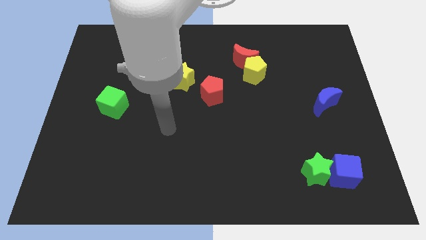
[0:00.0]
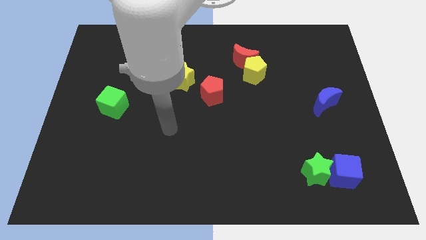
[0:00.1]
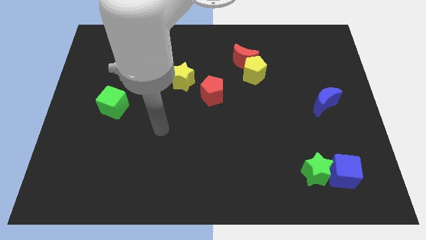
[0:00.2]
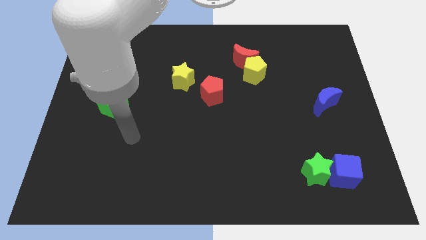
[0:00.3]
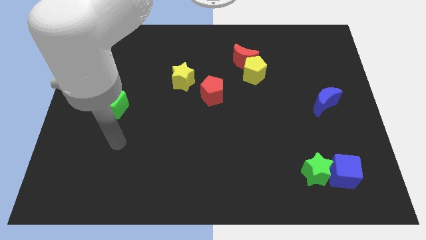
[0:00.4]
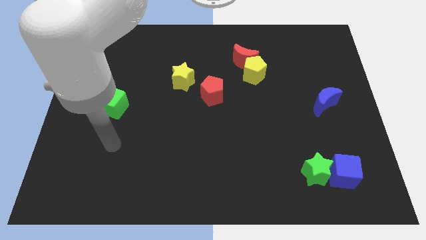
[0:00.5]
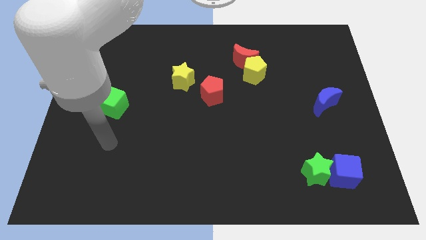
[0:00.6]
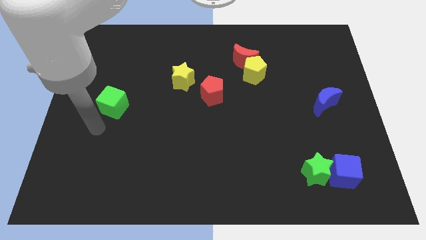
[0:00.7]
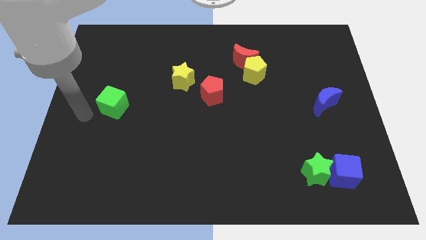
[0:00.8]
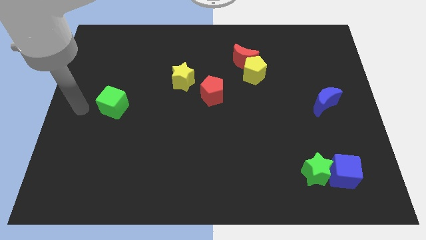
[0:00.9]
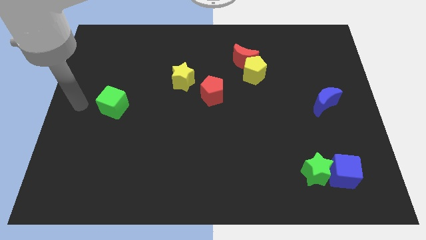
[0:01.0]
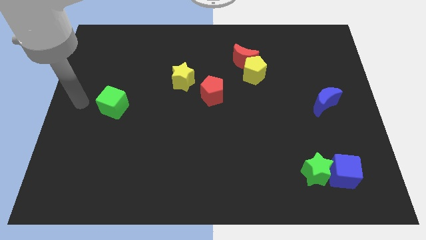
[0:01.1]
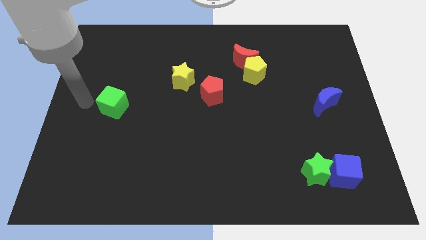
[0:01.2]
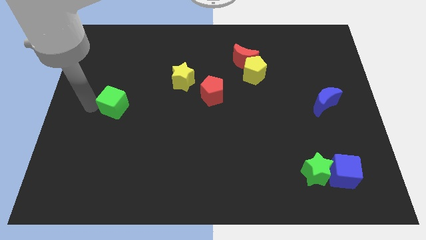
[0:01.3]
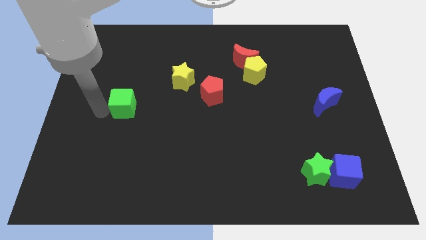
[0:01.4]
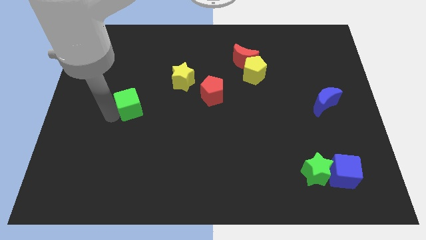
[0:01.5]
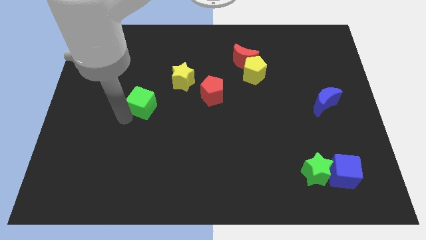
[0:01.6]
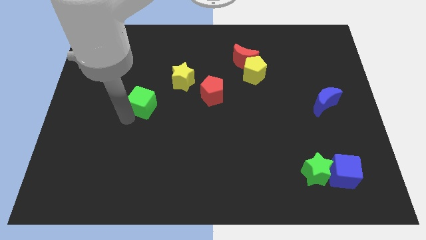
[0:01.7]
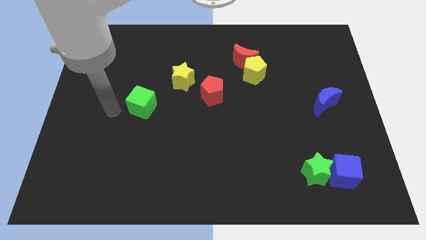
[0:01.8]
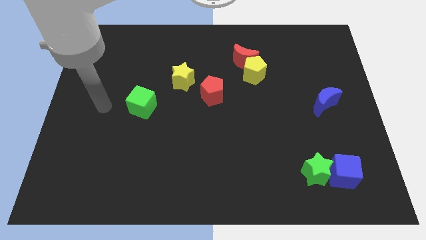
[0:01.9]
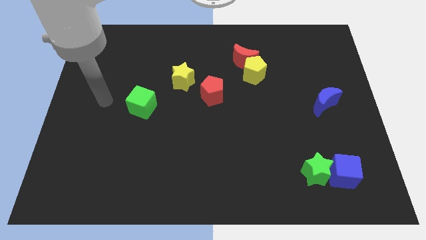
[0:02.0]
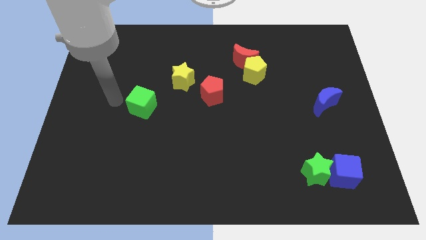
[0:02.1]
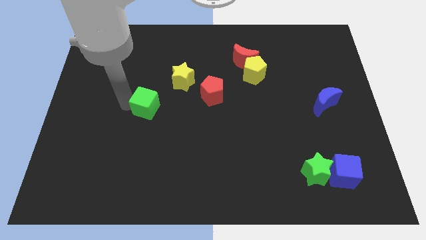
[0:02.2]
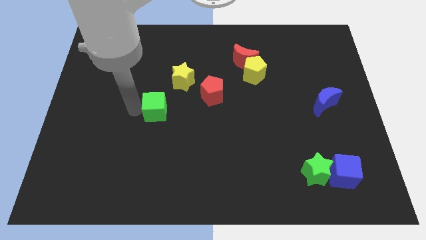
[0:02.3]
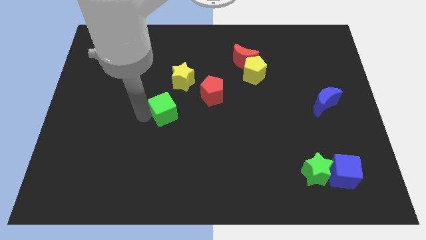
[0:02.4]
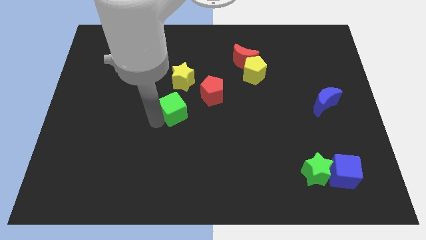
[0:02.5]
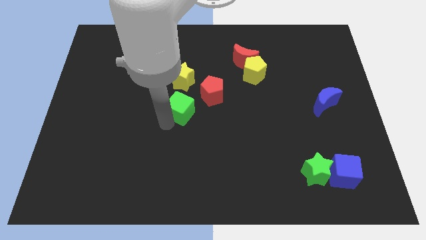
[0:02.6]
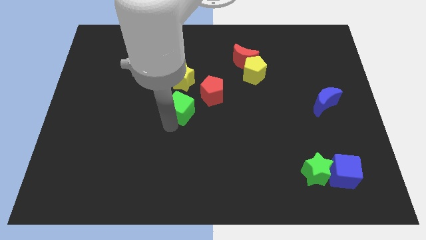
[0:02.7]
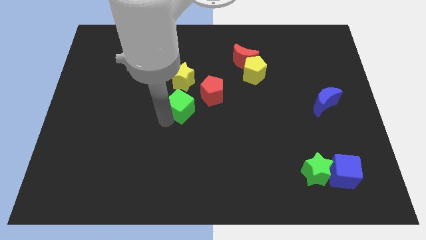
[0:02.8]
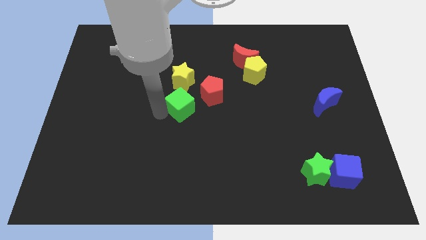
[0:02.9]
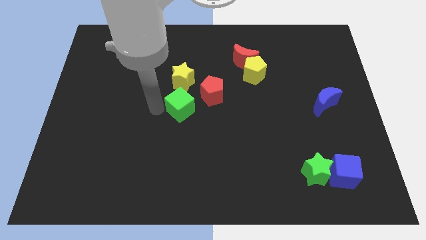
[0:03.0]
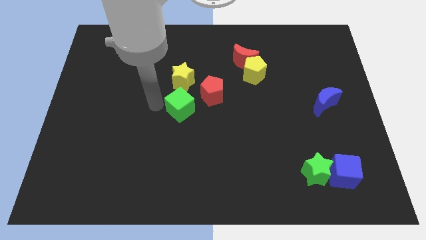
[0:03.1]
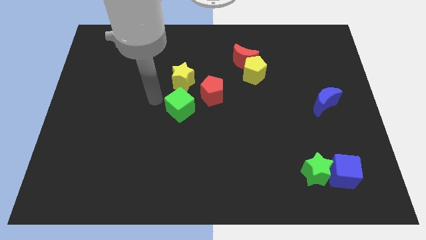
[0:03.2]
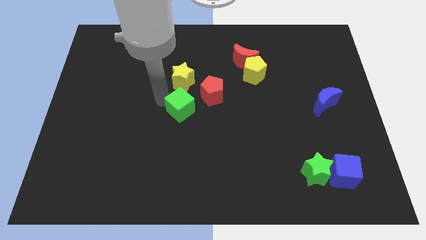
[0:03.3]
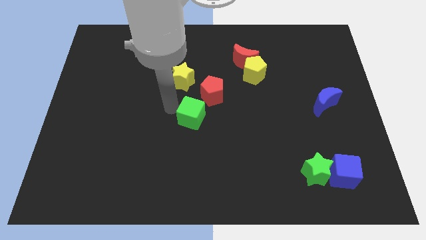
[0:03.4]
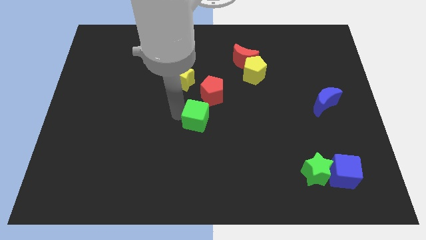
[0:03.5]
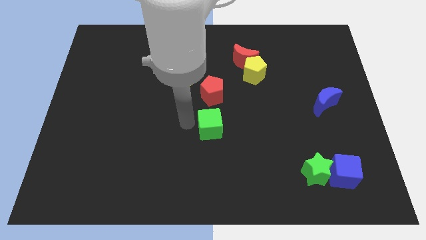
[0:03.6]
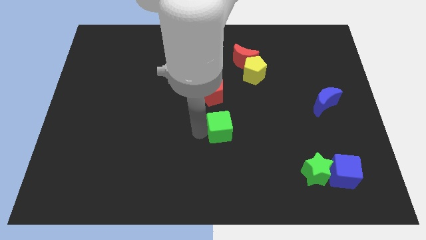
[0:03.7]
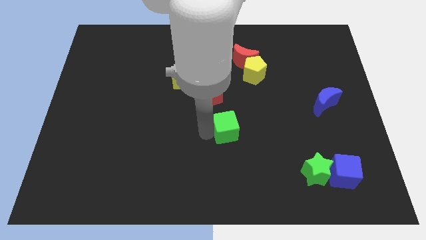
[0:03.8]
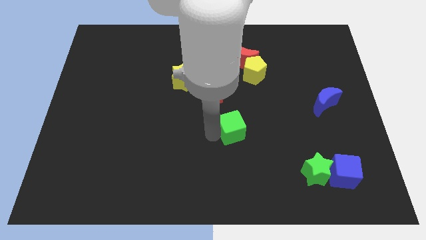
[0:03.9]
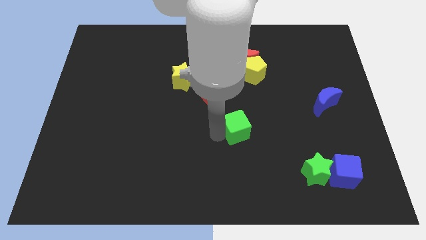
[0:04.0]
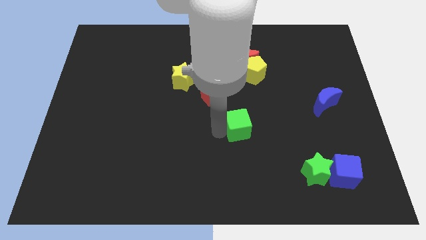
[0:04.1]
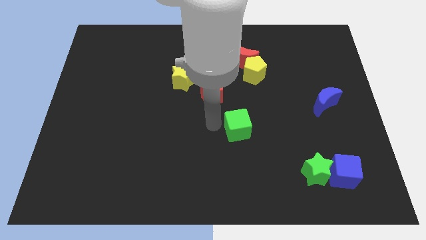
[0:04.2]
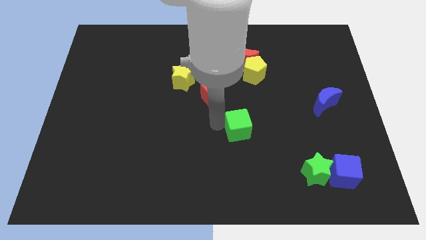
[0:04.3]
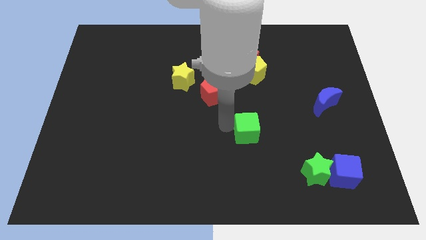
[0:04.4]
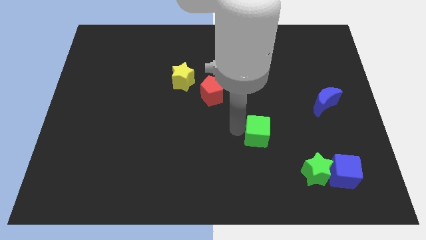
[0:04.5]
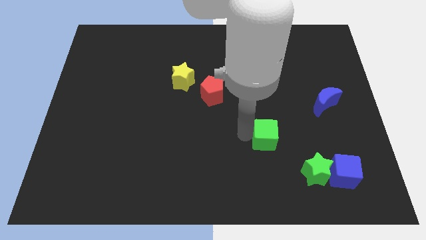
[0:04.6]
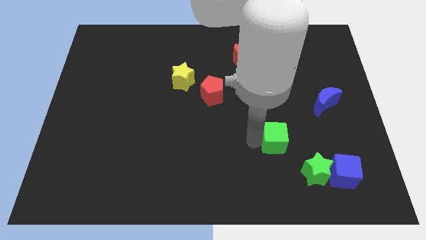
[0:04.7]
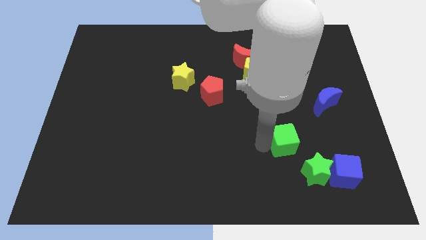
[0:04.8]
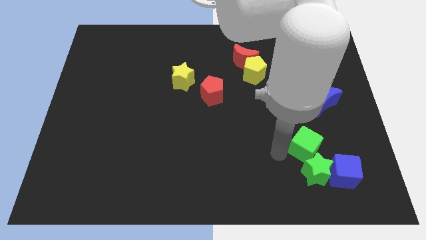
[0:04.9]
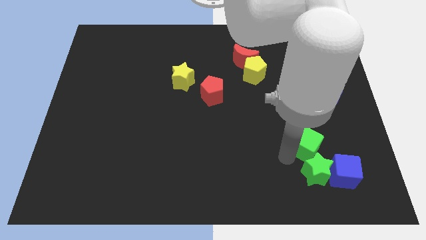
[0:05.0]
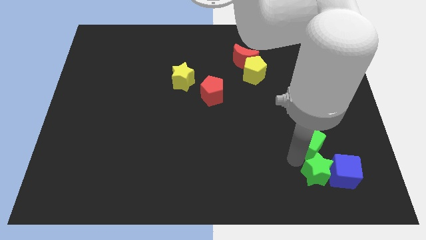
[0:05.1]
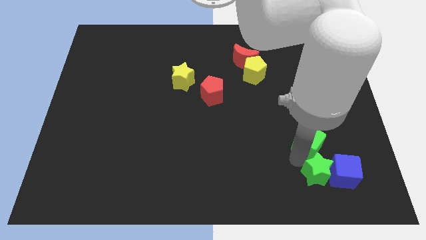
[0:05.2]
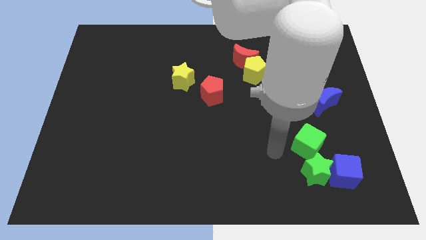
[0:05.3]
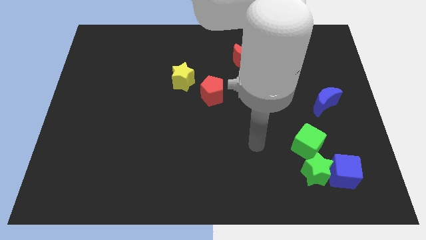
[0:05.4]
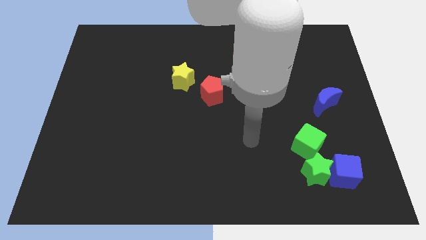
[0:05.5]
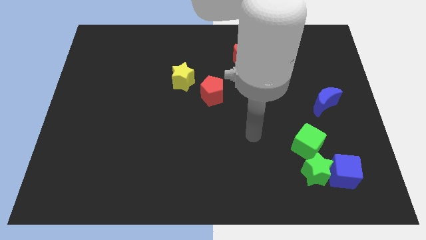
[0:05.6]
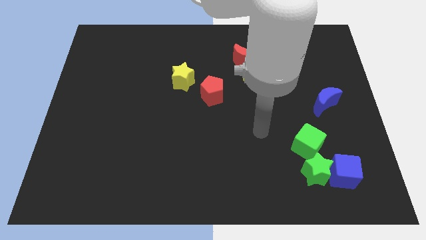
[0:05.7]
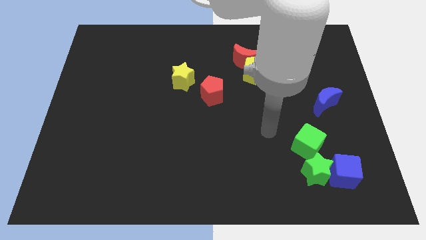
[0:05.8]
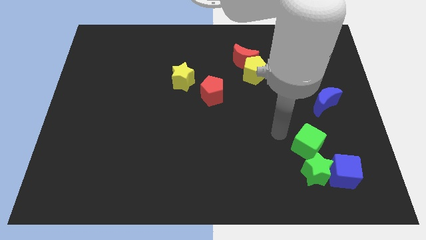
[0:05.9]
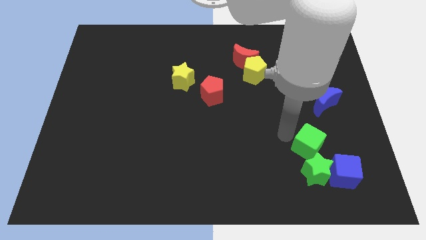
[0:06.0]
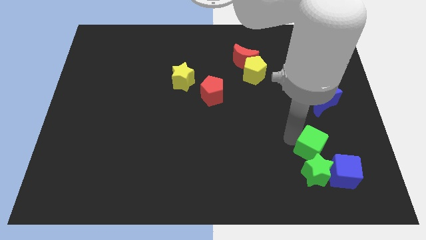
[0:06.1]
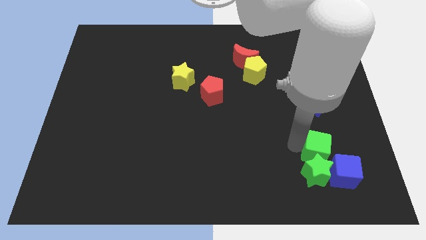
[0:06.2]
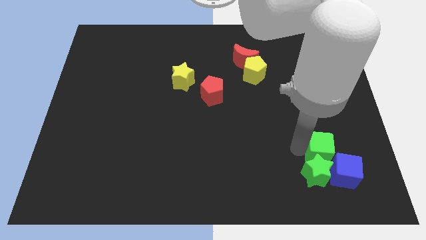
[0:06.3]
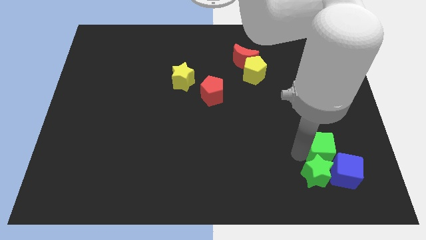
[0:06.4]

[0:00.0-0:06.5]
move the green cube towards the green star

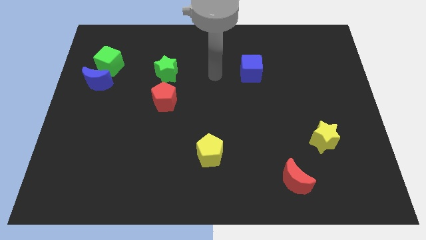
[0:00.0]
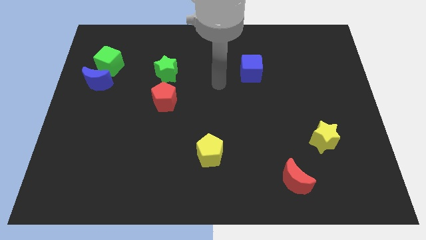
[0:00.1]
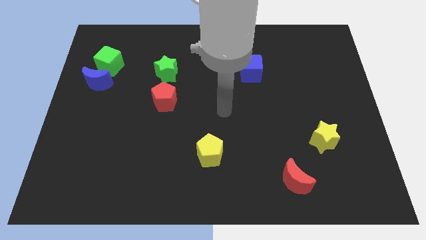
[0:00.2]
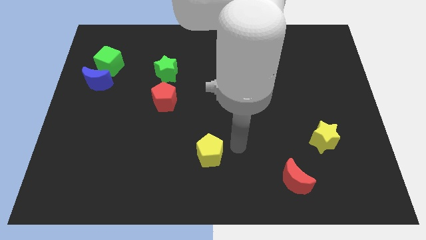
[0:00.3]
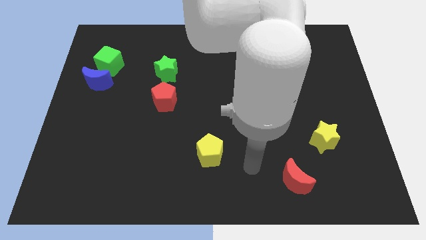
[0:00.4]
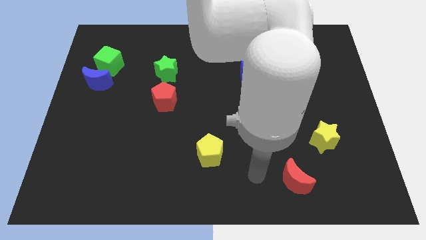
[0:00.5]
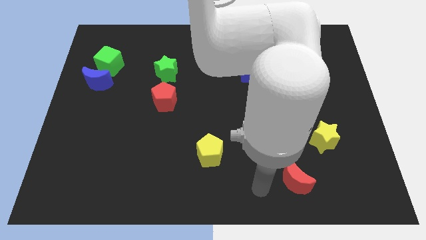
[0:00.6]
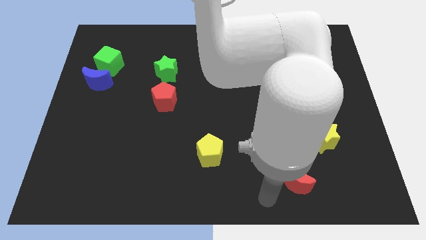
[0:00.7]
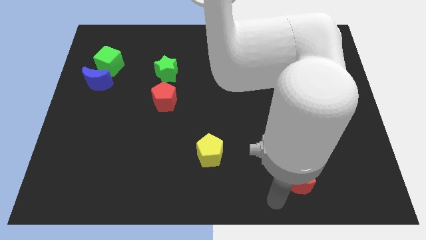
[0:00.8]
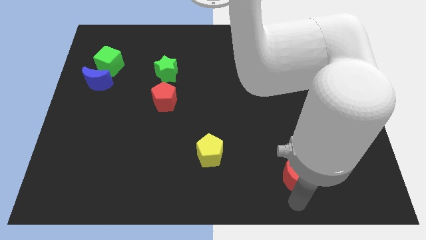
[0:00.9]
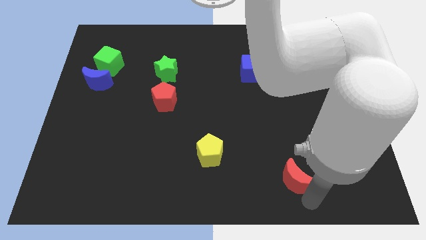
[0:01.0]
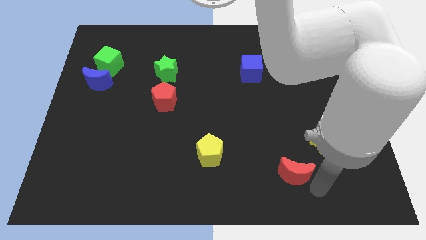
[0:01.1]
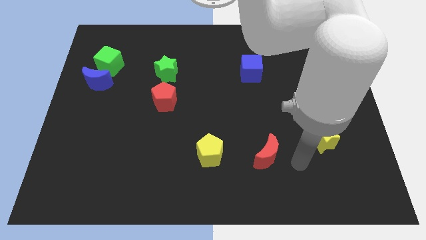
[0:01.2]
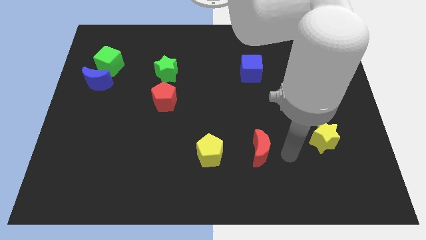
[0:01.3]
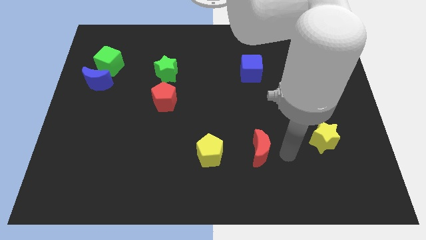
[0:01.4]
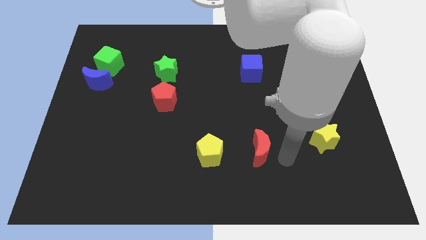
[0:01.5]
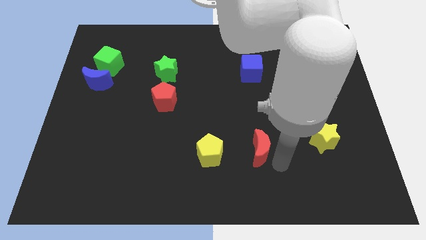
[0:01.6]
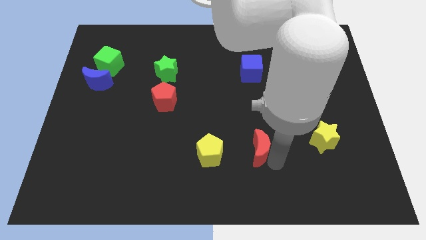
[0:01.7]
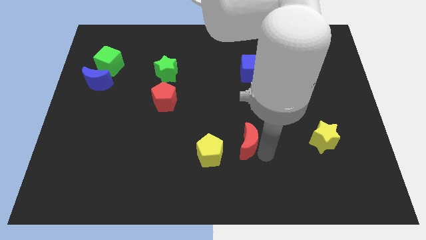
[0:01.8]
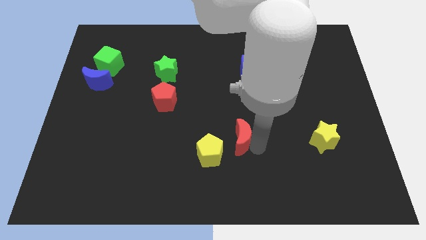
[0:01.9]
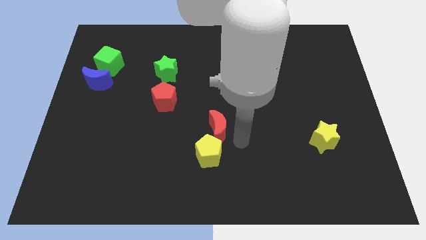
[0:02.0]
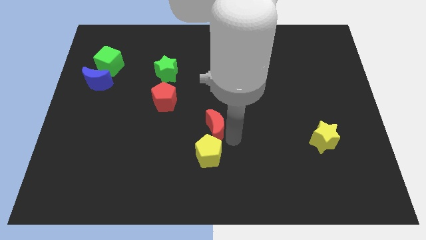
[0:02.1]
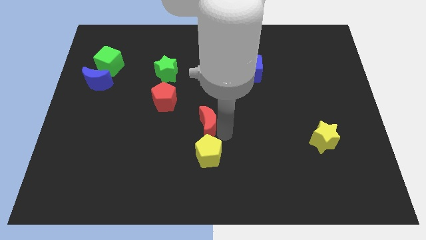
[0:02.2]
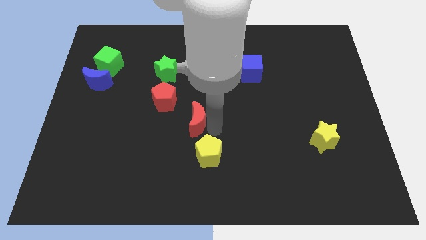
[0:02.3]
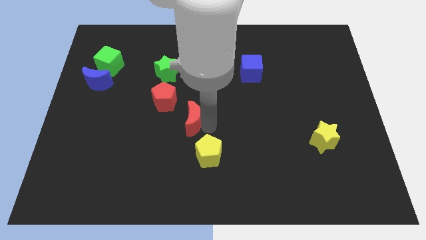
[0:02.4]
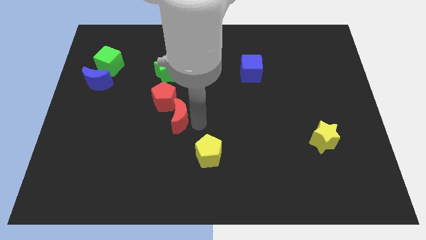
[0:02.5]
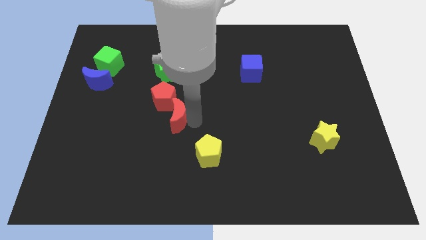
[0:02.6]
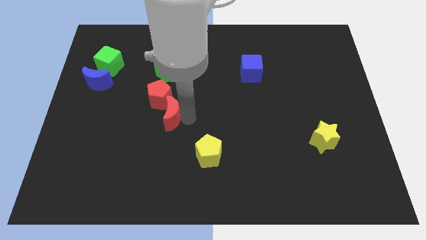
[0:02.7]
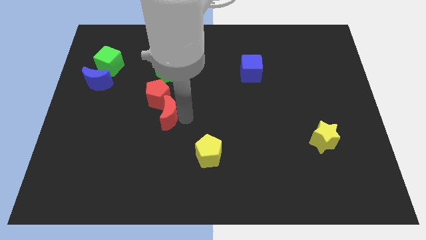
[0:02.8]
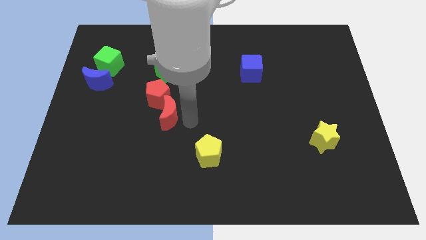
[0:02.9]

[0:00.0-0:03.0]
slide the red moon next to the red pentagon
